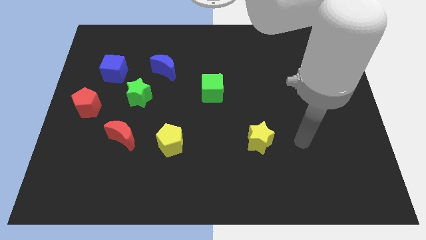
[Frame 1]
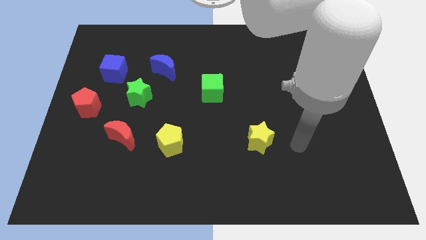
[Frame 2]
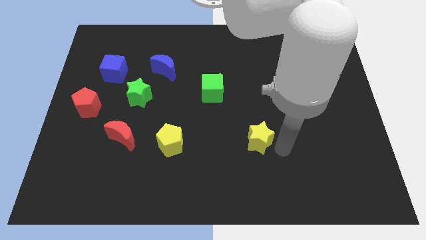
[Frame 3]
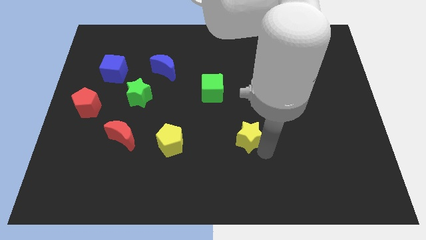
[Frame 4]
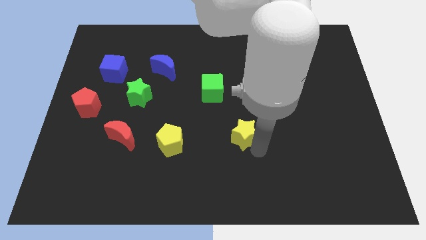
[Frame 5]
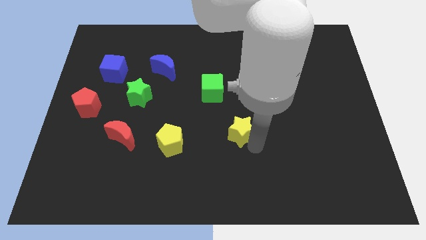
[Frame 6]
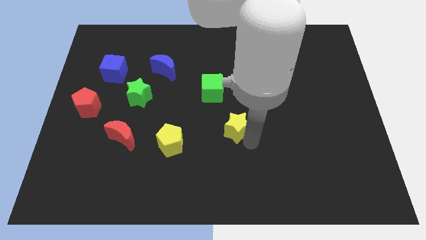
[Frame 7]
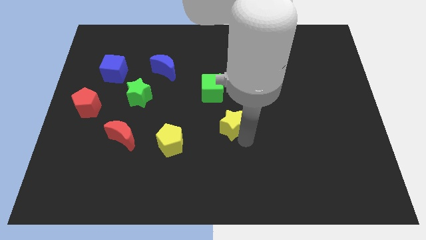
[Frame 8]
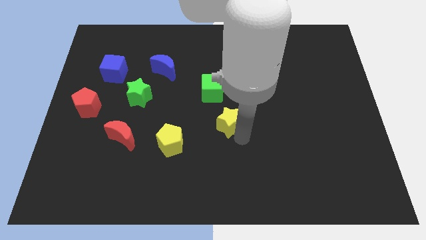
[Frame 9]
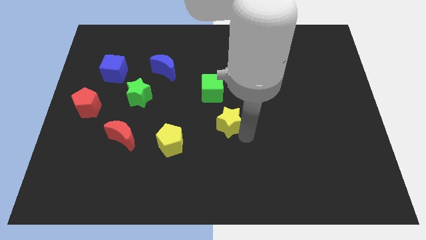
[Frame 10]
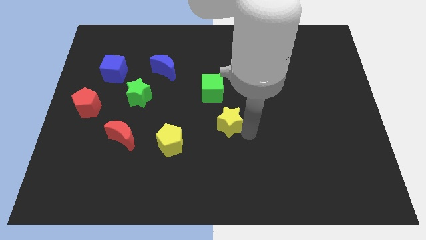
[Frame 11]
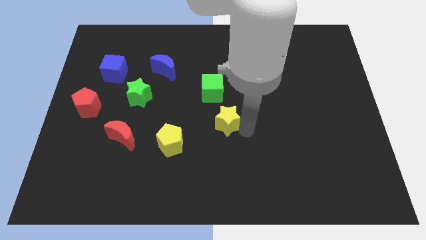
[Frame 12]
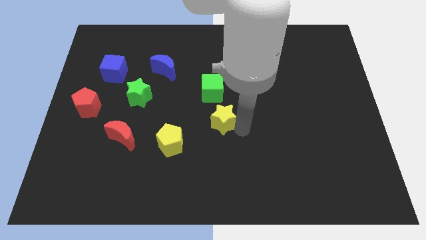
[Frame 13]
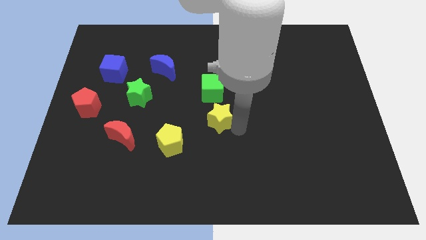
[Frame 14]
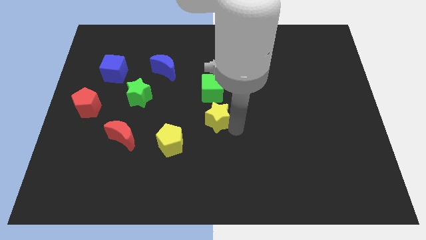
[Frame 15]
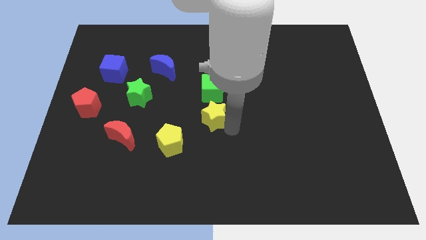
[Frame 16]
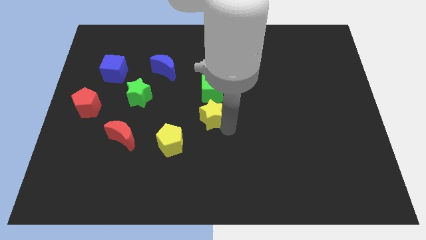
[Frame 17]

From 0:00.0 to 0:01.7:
put the yellow star below the green cube

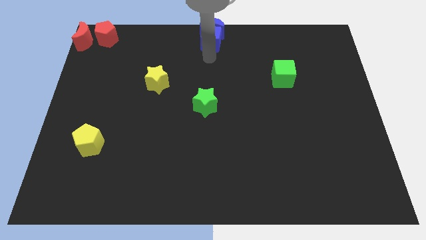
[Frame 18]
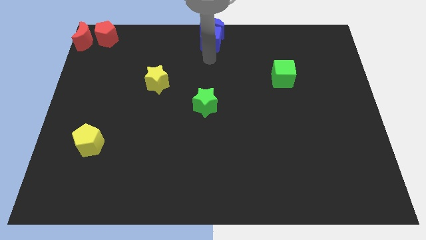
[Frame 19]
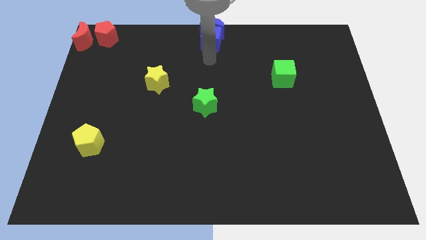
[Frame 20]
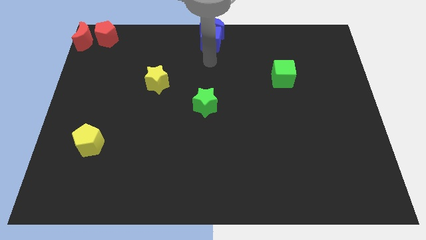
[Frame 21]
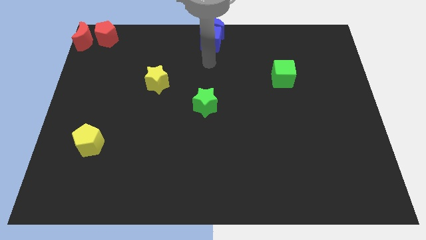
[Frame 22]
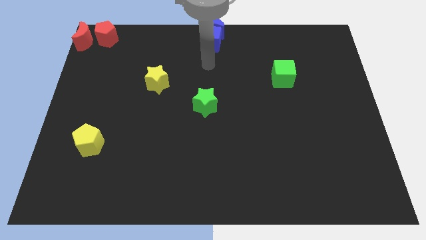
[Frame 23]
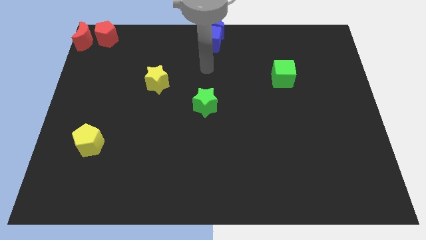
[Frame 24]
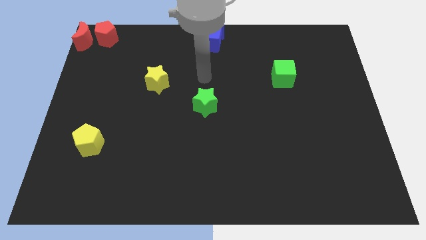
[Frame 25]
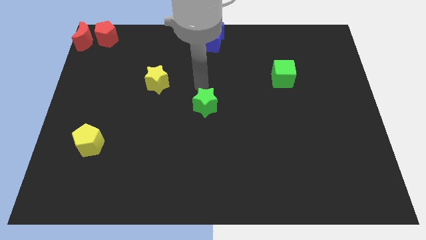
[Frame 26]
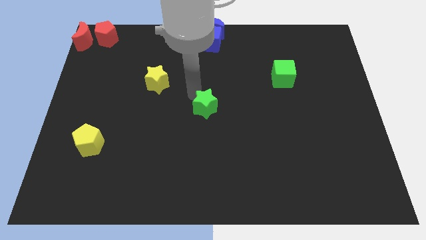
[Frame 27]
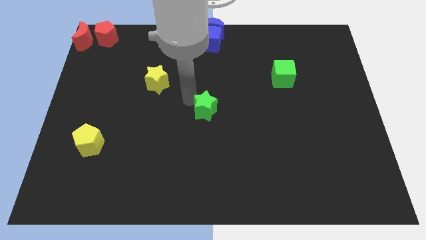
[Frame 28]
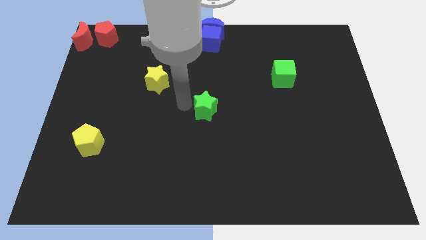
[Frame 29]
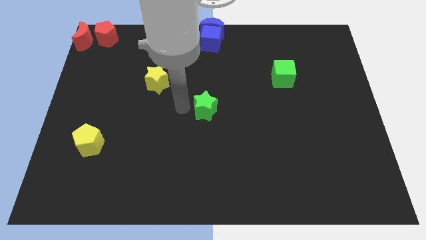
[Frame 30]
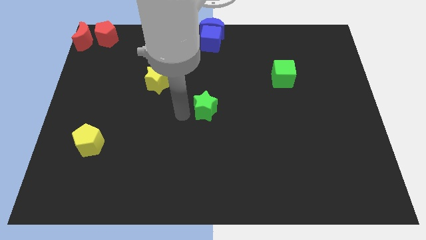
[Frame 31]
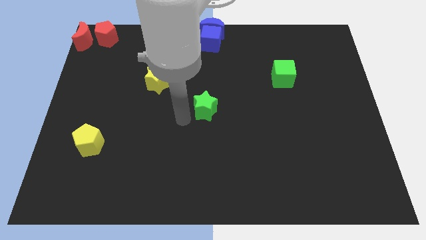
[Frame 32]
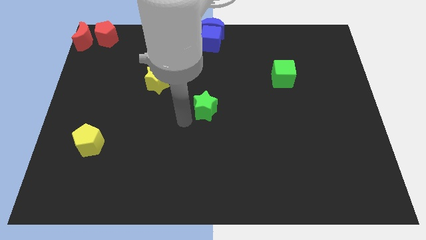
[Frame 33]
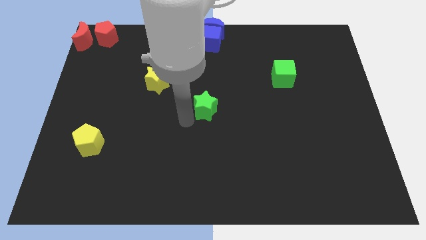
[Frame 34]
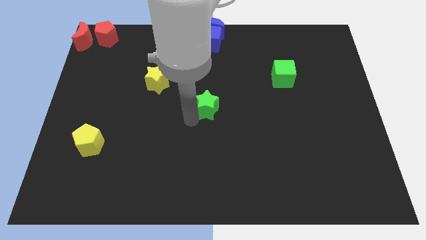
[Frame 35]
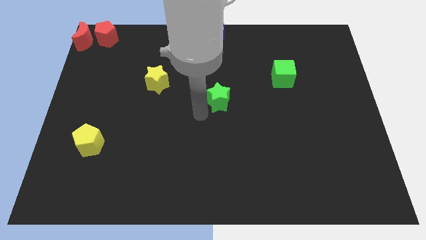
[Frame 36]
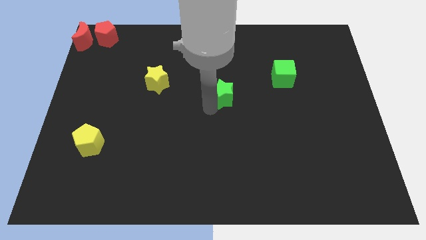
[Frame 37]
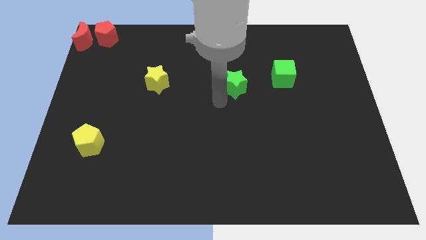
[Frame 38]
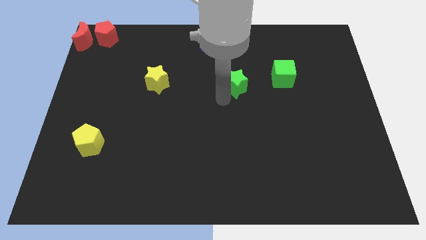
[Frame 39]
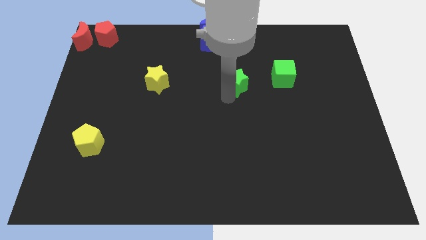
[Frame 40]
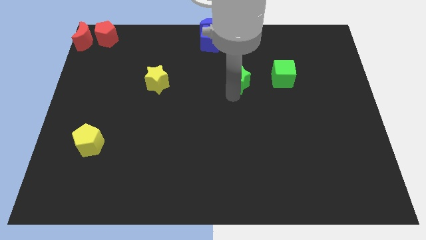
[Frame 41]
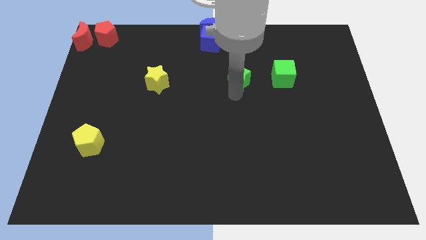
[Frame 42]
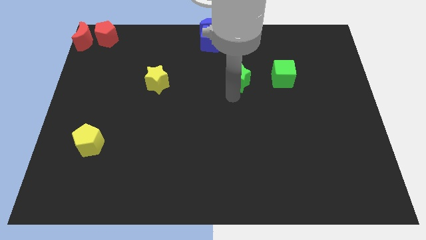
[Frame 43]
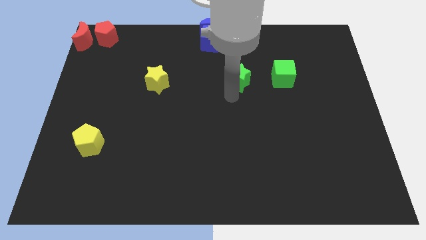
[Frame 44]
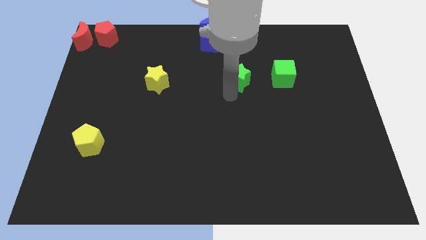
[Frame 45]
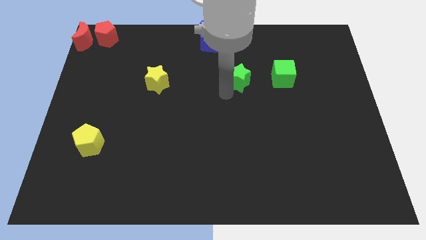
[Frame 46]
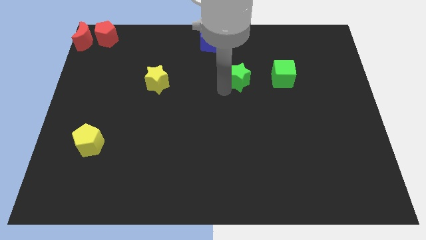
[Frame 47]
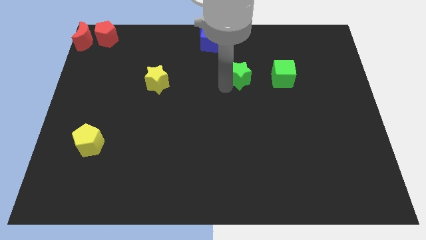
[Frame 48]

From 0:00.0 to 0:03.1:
move the green star to the left of the green cube

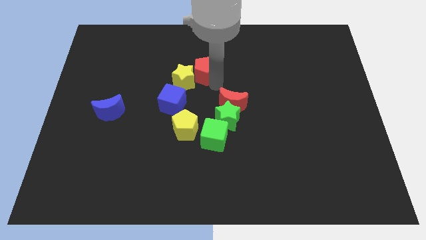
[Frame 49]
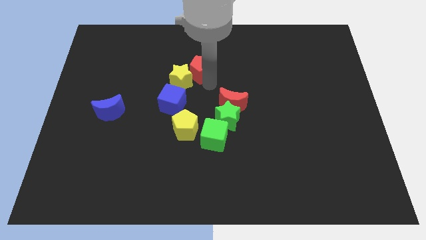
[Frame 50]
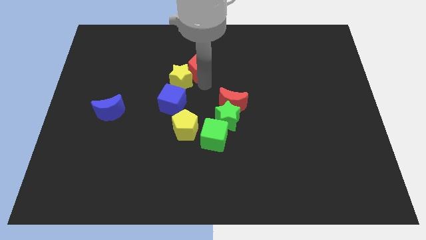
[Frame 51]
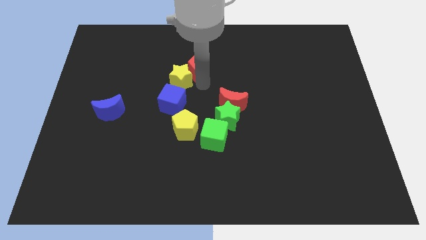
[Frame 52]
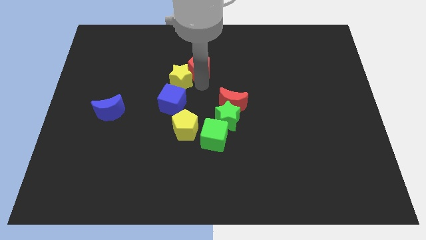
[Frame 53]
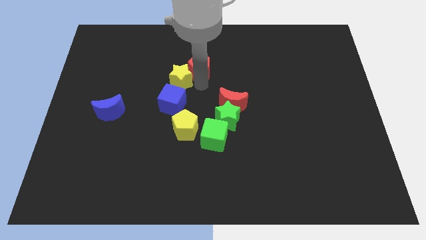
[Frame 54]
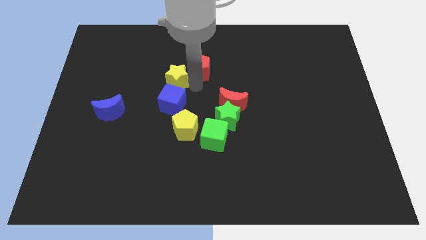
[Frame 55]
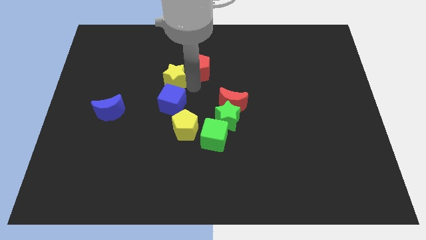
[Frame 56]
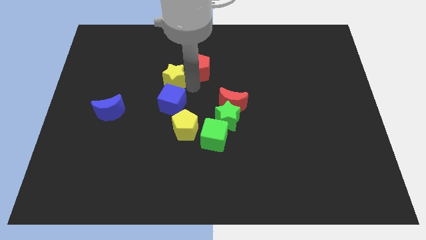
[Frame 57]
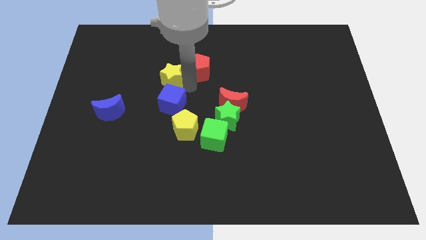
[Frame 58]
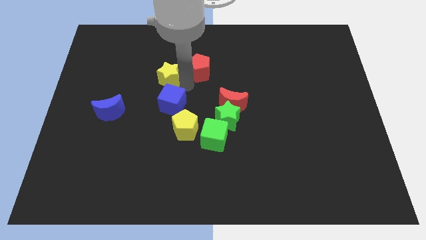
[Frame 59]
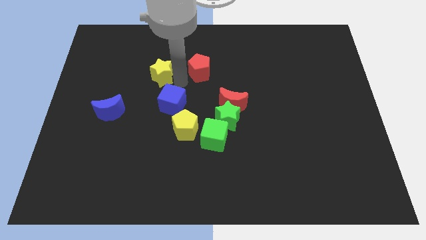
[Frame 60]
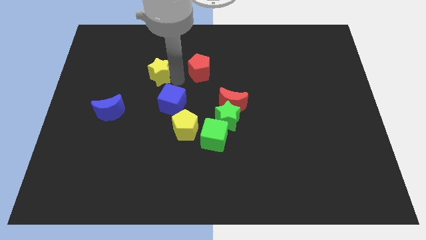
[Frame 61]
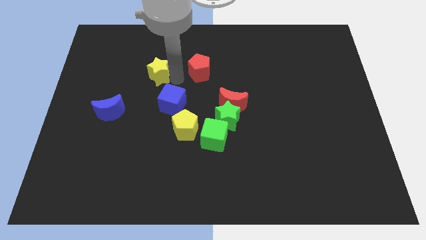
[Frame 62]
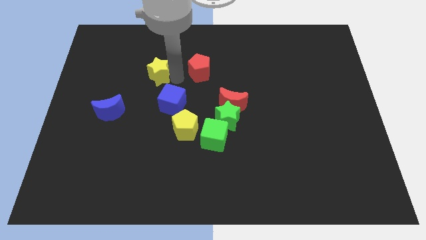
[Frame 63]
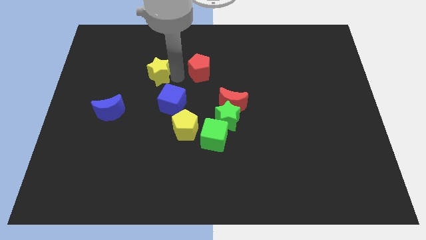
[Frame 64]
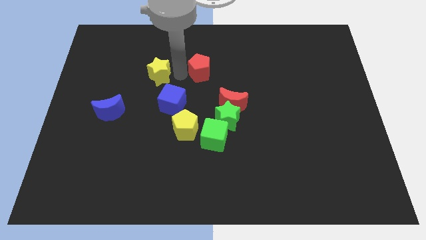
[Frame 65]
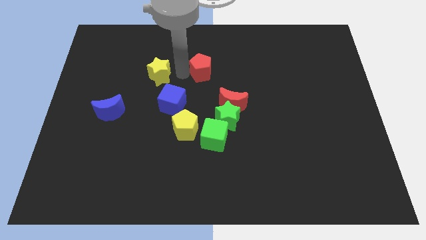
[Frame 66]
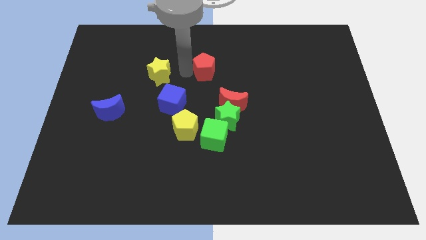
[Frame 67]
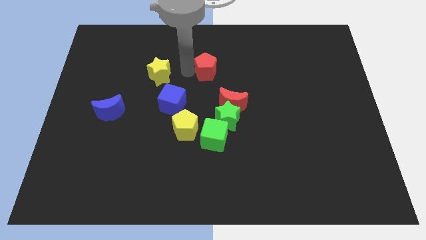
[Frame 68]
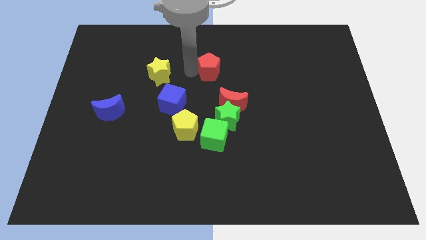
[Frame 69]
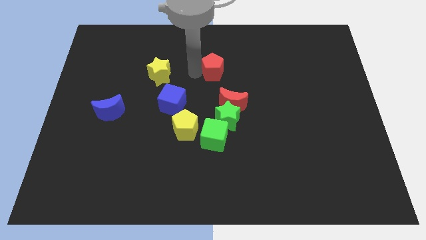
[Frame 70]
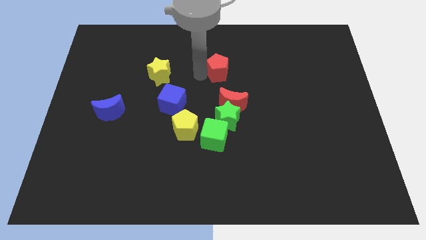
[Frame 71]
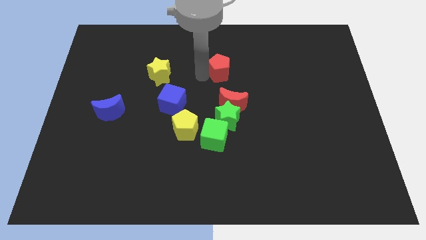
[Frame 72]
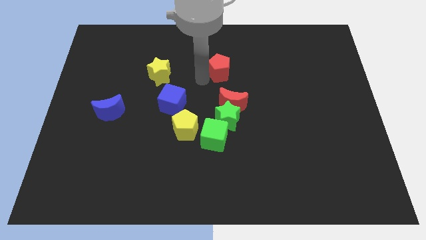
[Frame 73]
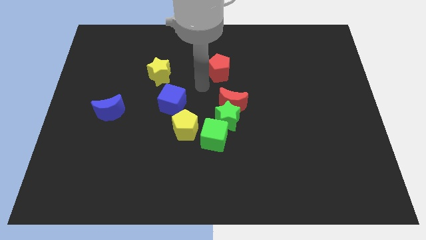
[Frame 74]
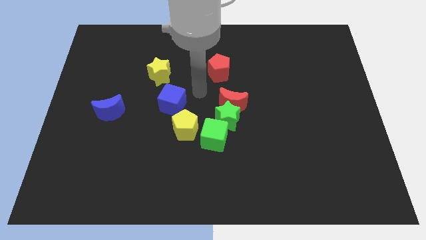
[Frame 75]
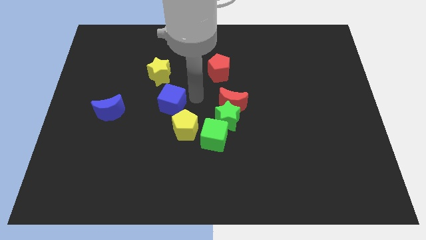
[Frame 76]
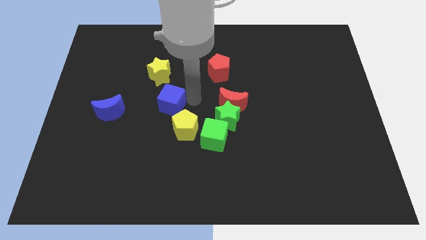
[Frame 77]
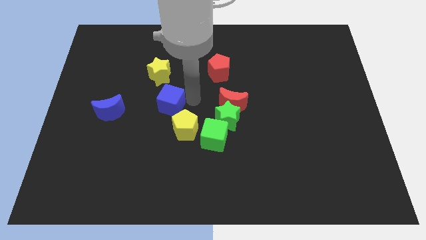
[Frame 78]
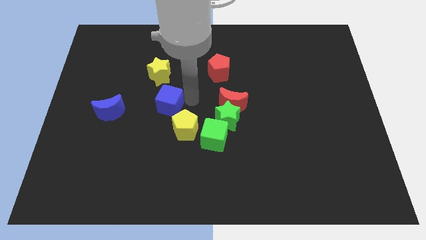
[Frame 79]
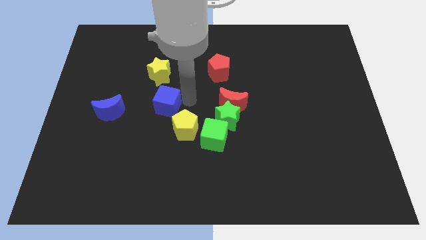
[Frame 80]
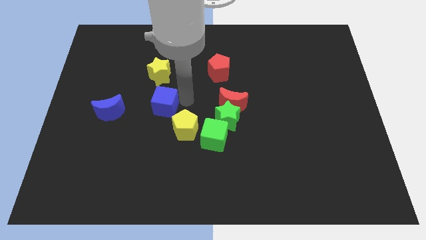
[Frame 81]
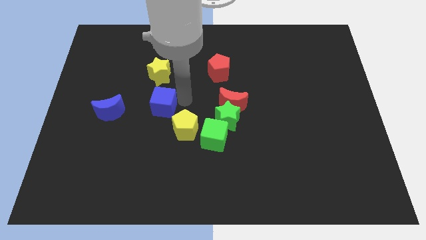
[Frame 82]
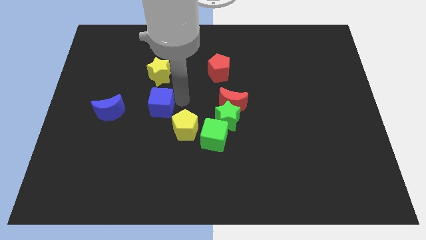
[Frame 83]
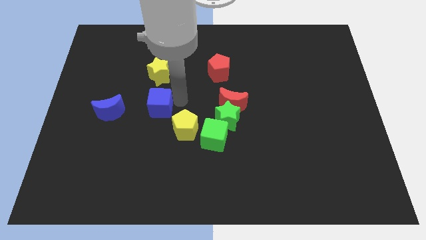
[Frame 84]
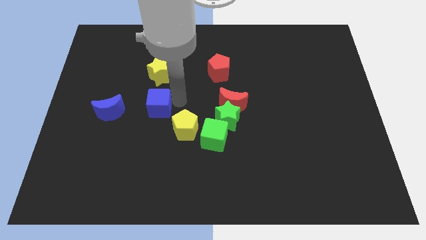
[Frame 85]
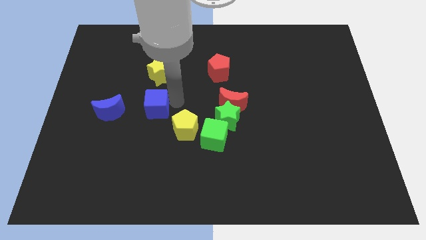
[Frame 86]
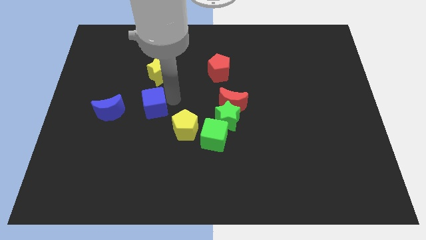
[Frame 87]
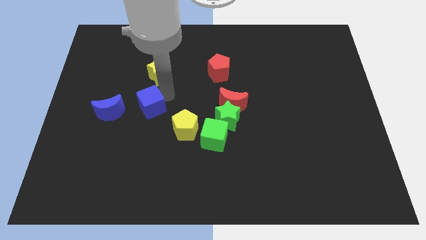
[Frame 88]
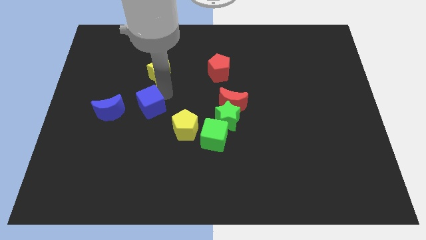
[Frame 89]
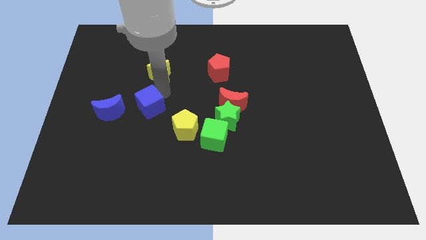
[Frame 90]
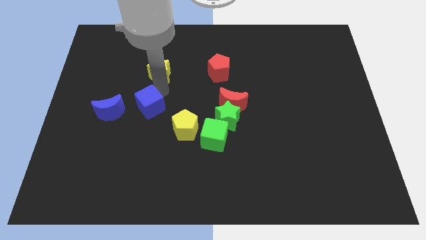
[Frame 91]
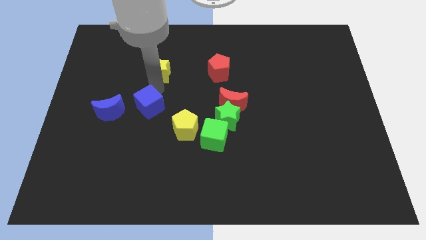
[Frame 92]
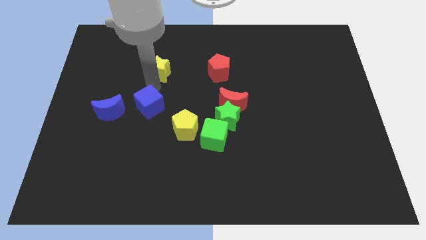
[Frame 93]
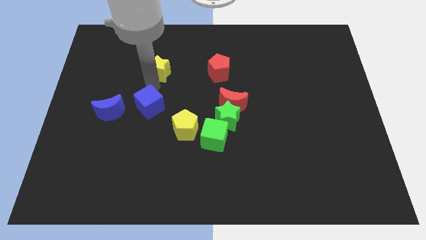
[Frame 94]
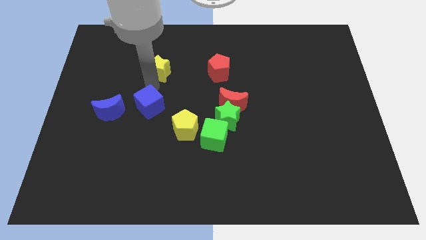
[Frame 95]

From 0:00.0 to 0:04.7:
drag the blue cube slightly to the left
